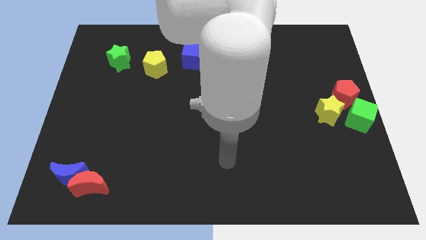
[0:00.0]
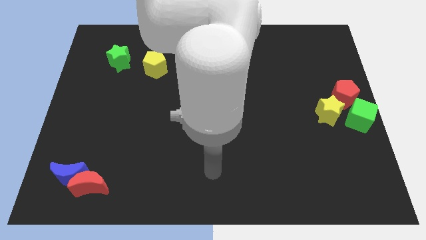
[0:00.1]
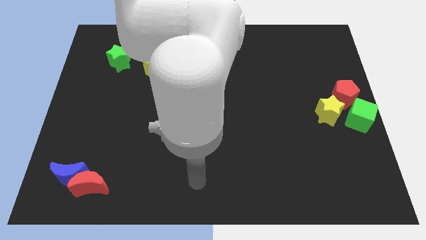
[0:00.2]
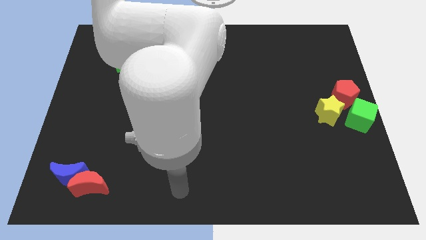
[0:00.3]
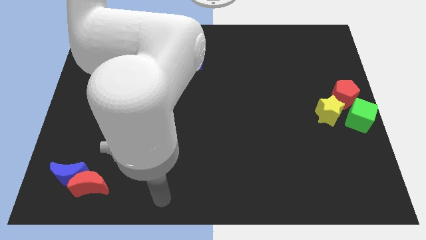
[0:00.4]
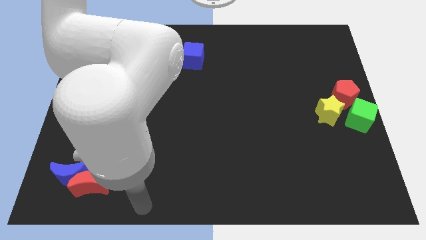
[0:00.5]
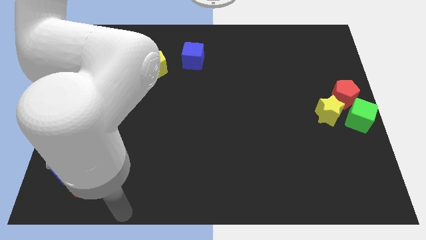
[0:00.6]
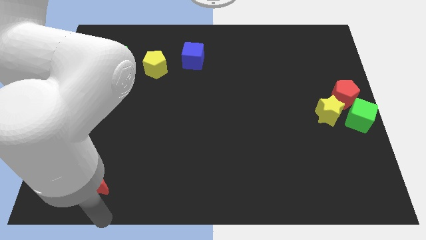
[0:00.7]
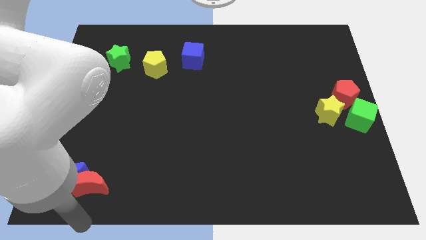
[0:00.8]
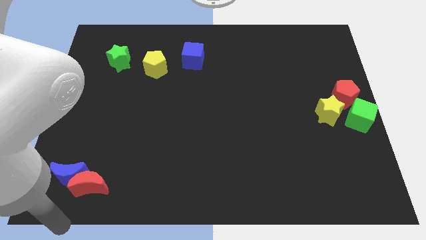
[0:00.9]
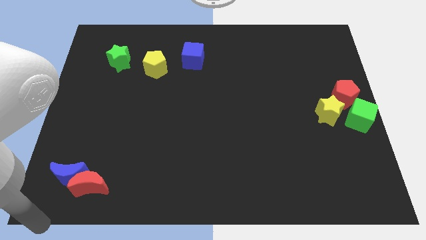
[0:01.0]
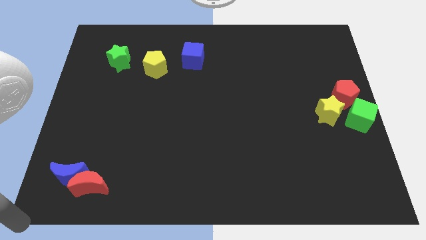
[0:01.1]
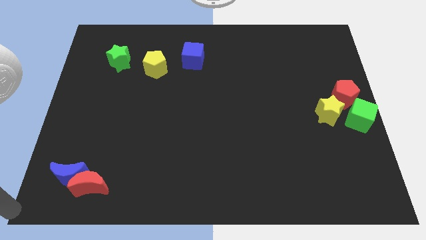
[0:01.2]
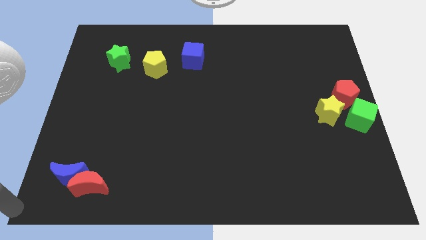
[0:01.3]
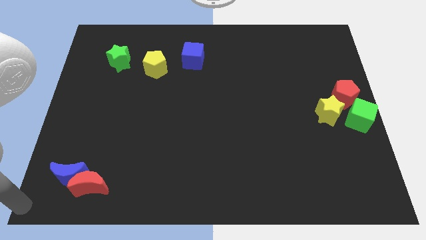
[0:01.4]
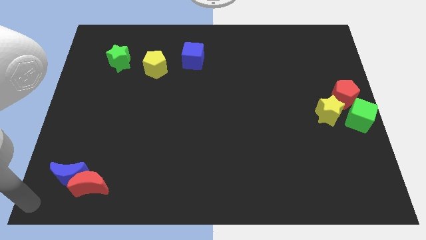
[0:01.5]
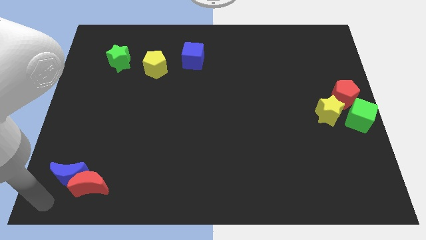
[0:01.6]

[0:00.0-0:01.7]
move your arm to the left corner of the board

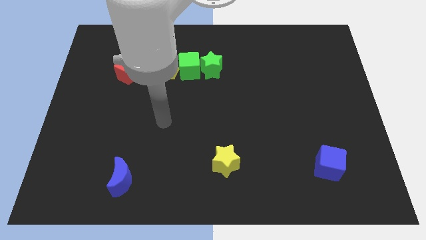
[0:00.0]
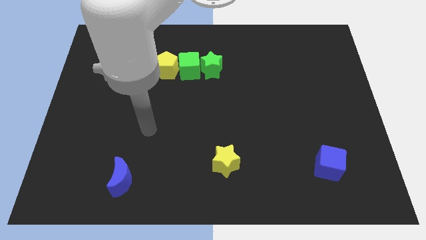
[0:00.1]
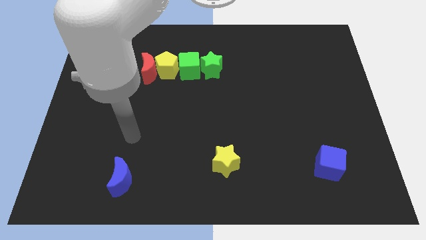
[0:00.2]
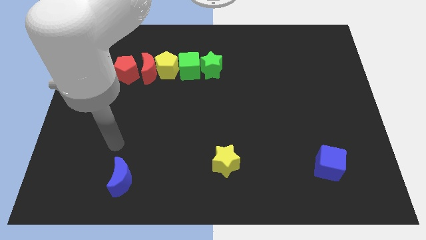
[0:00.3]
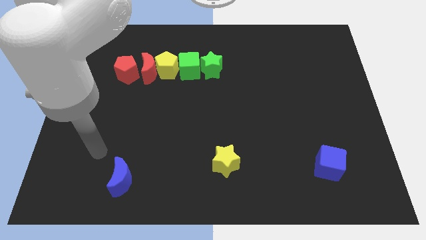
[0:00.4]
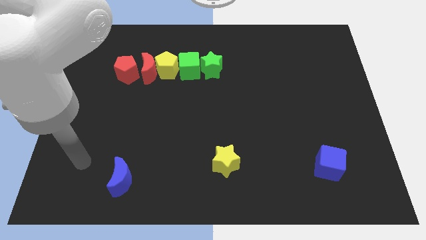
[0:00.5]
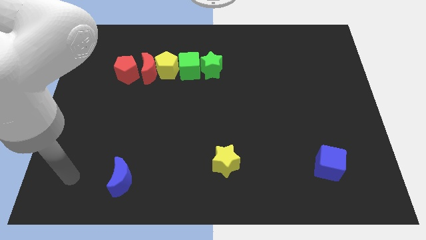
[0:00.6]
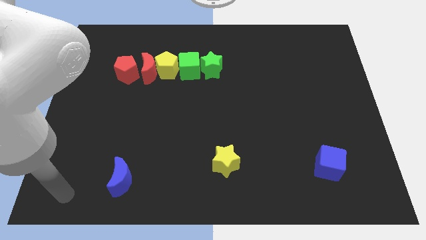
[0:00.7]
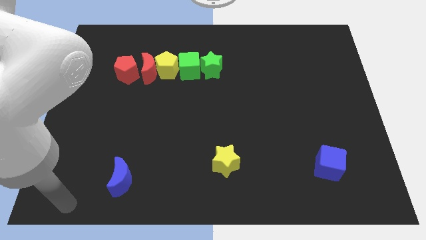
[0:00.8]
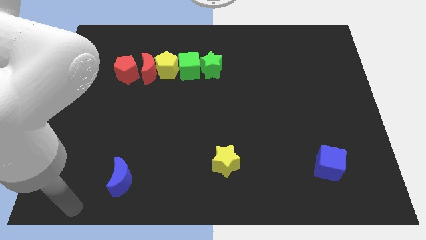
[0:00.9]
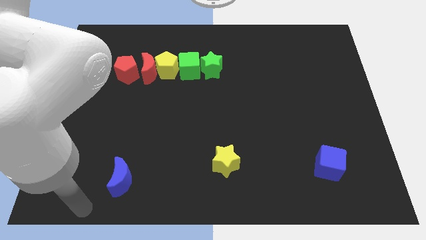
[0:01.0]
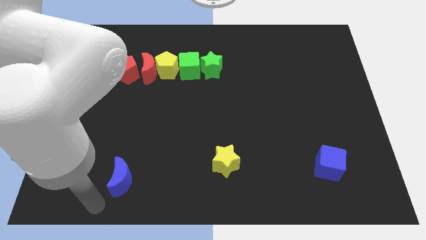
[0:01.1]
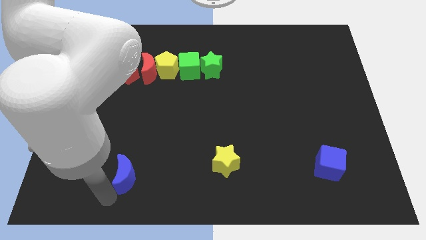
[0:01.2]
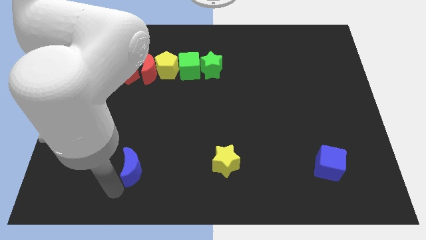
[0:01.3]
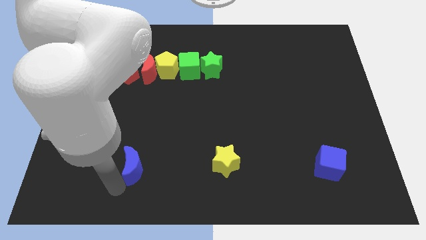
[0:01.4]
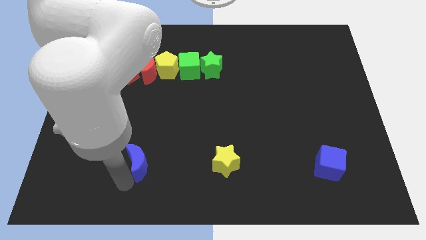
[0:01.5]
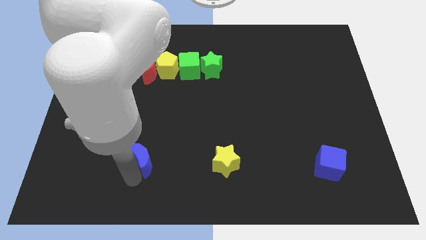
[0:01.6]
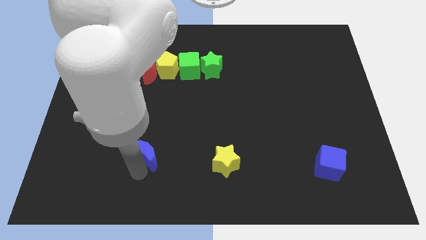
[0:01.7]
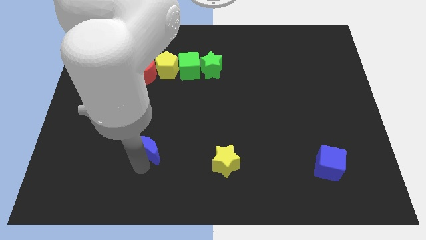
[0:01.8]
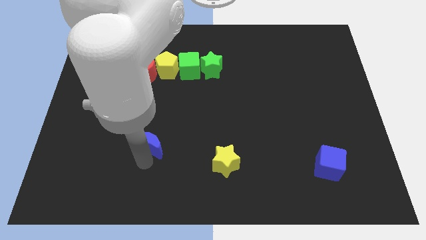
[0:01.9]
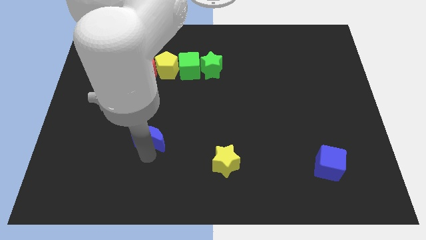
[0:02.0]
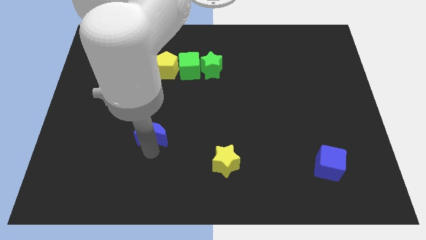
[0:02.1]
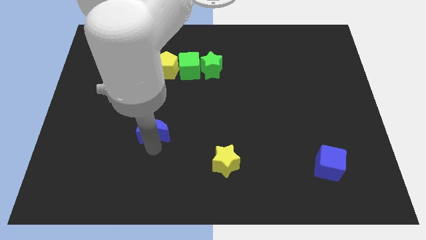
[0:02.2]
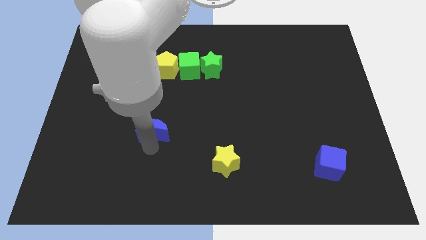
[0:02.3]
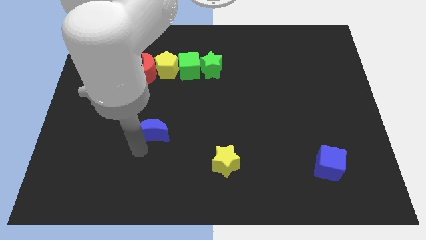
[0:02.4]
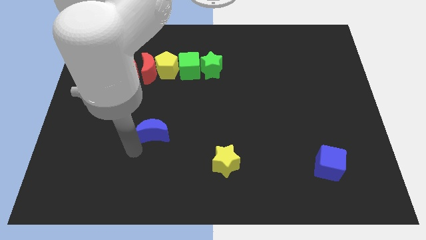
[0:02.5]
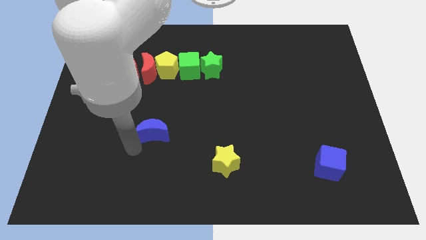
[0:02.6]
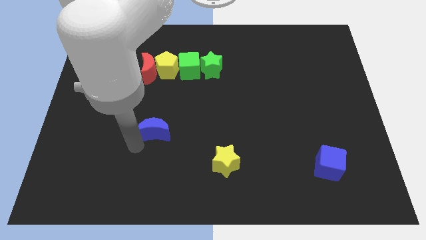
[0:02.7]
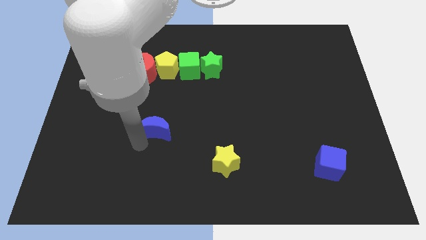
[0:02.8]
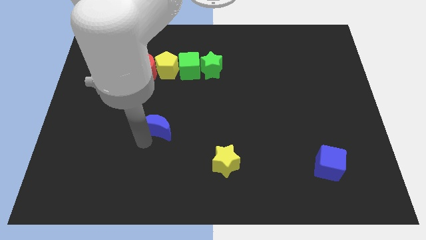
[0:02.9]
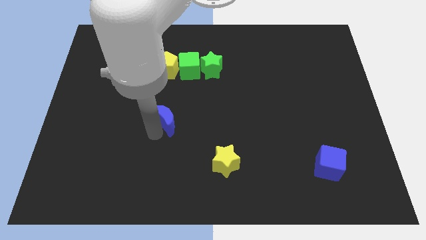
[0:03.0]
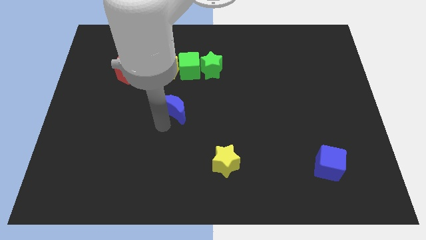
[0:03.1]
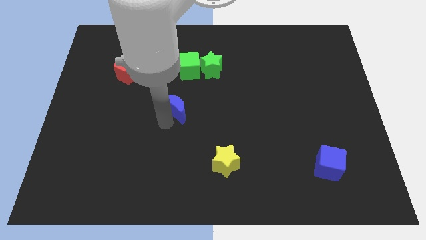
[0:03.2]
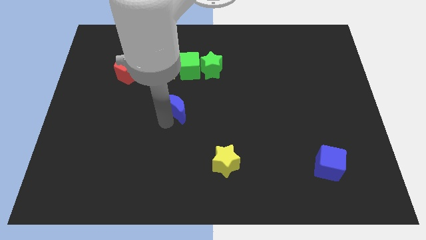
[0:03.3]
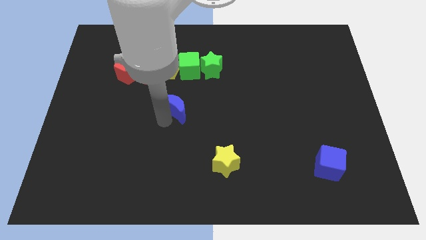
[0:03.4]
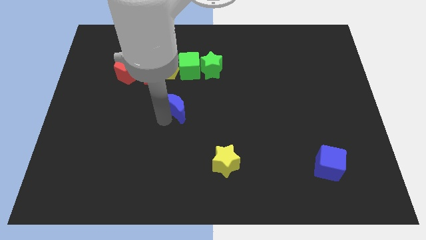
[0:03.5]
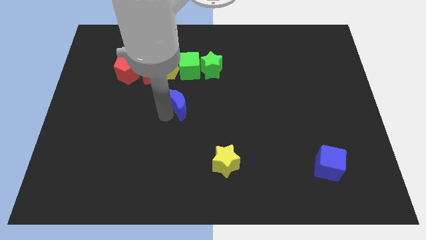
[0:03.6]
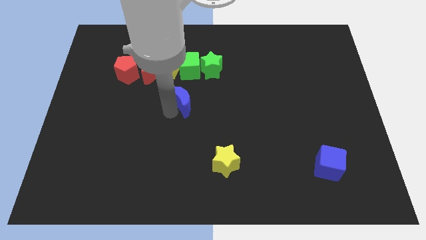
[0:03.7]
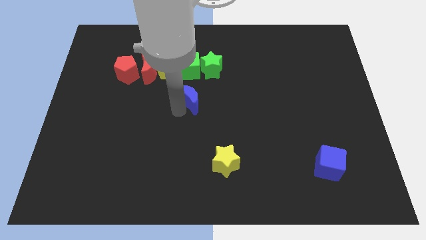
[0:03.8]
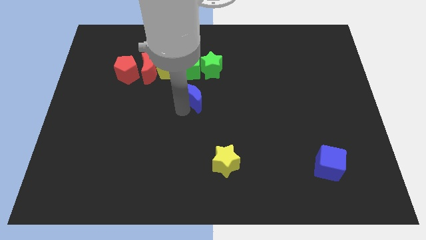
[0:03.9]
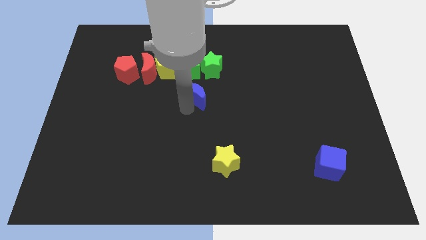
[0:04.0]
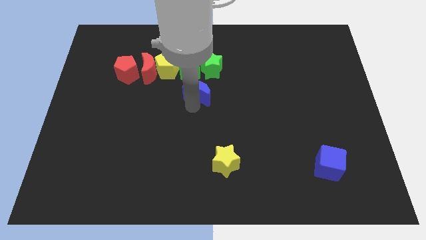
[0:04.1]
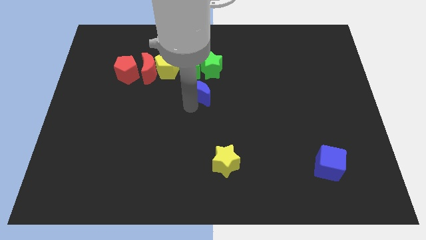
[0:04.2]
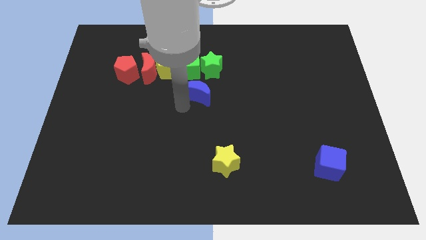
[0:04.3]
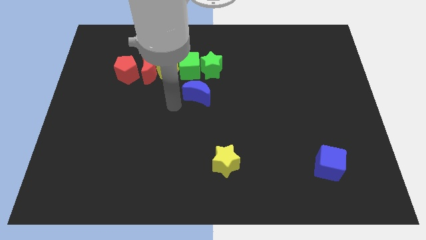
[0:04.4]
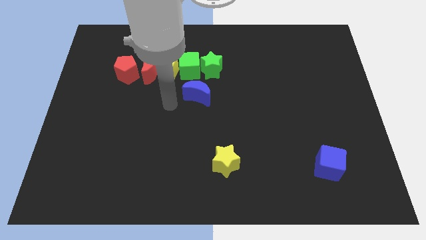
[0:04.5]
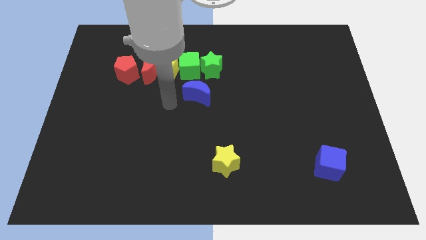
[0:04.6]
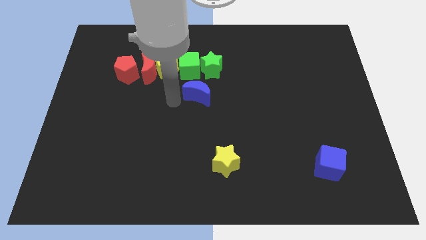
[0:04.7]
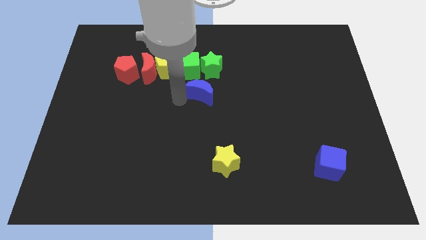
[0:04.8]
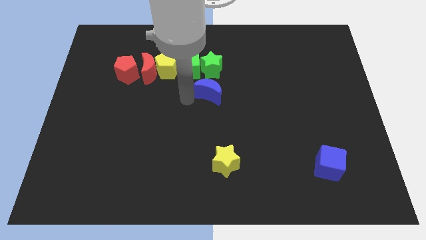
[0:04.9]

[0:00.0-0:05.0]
put the blue moon at the bottom of the green star

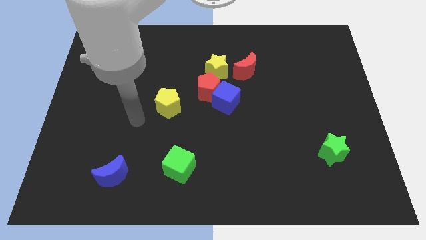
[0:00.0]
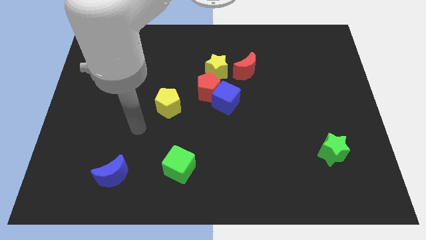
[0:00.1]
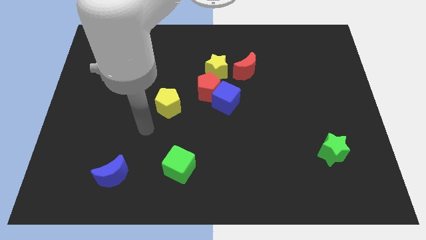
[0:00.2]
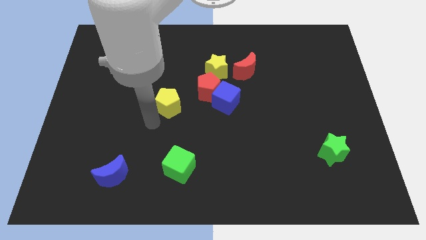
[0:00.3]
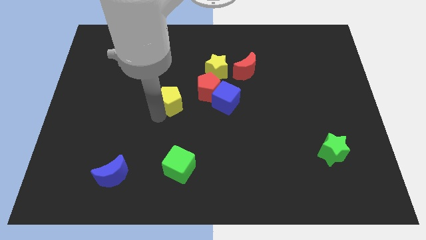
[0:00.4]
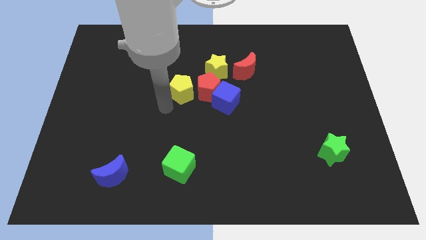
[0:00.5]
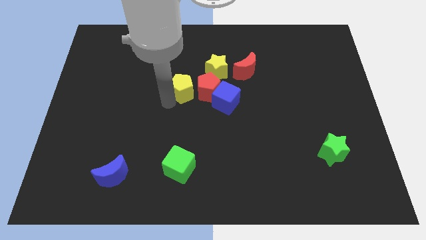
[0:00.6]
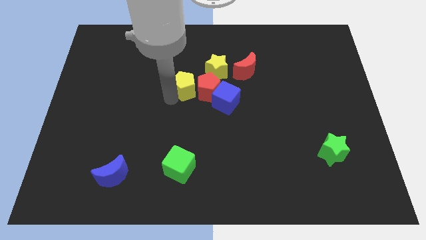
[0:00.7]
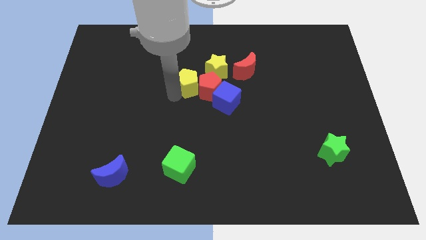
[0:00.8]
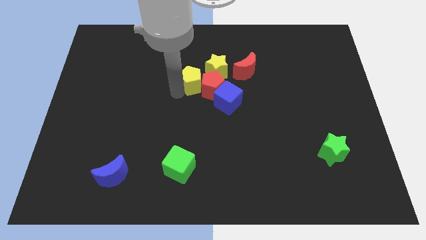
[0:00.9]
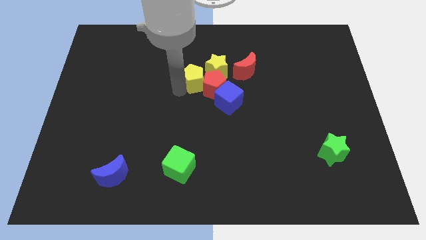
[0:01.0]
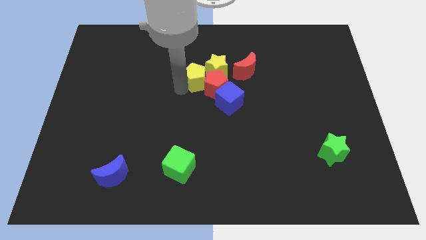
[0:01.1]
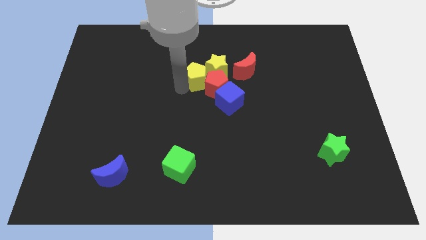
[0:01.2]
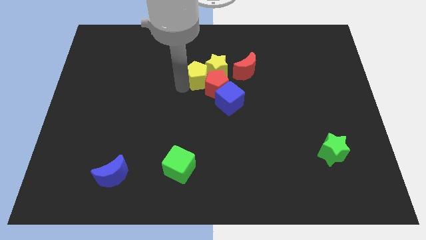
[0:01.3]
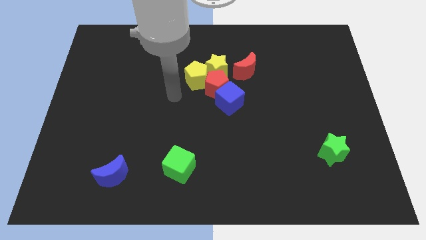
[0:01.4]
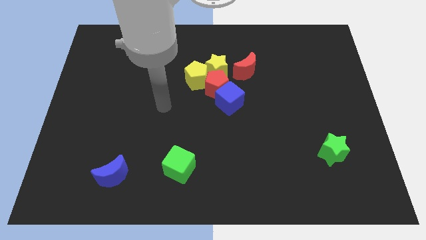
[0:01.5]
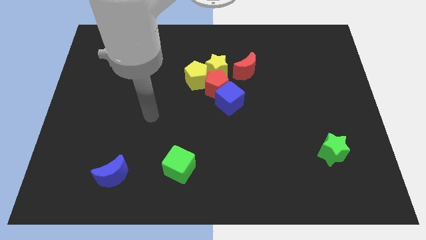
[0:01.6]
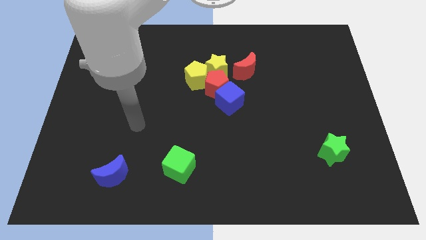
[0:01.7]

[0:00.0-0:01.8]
push the yellow pentagon into the red pentagon

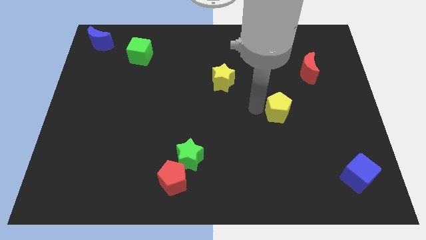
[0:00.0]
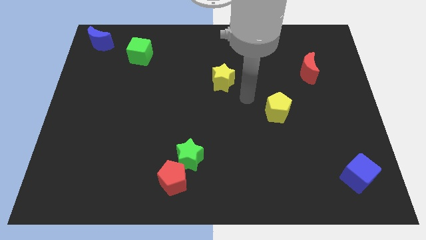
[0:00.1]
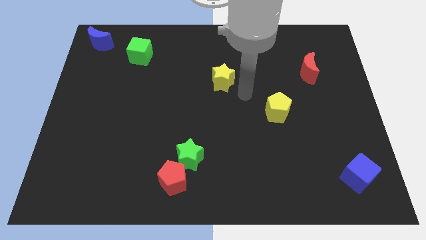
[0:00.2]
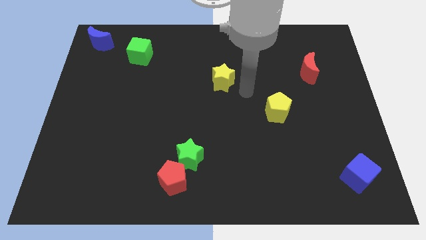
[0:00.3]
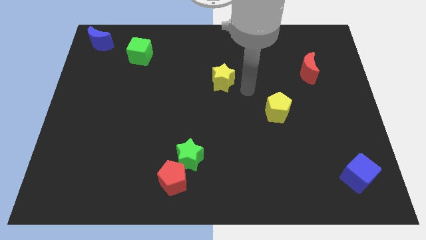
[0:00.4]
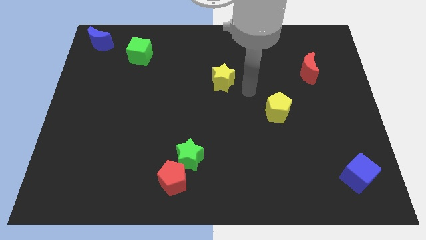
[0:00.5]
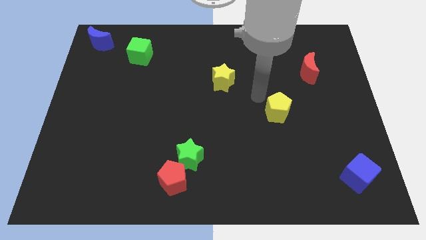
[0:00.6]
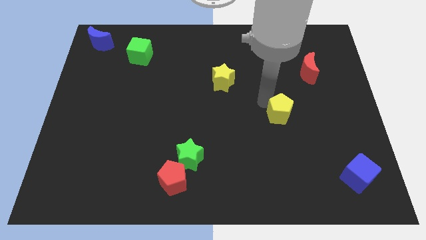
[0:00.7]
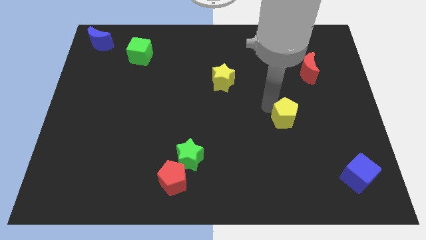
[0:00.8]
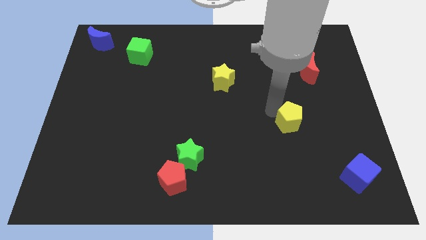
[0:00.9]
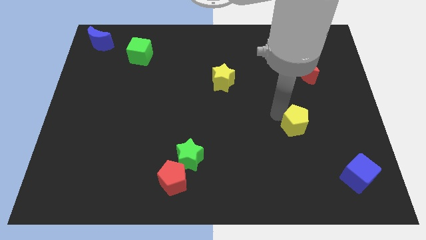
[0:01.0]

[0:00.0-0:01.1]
place yellow pentagon in between blue cube and yellow star
